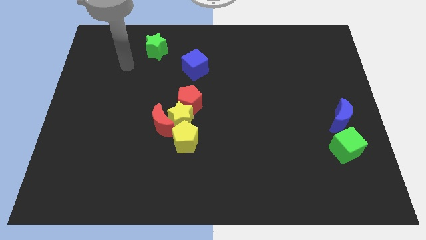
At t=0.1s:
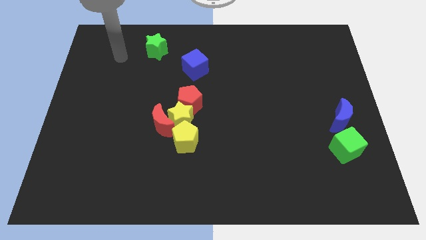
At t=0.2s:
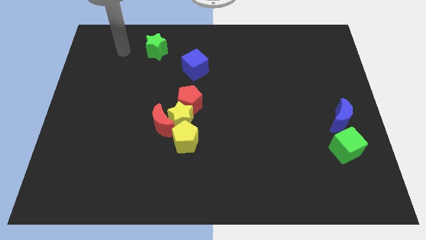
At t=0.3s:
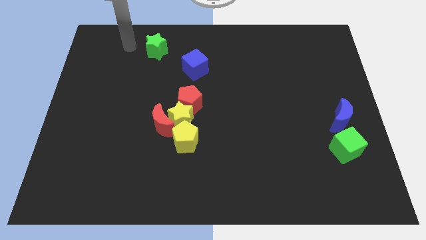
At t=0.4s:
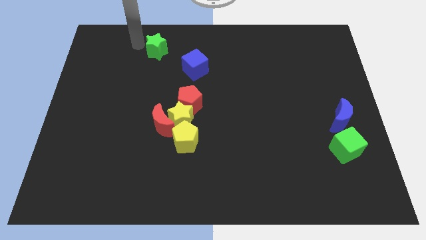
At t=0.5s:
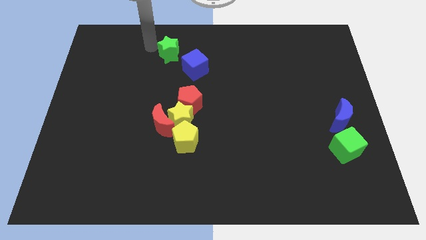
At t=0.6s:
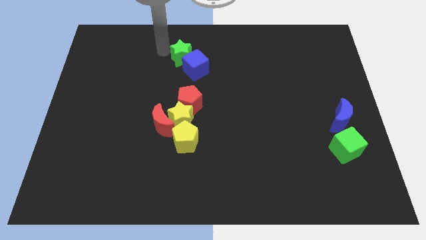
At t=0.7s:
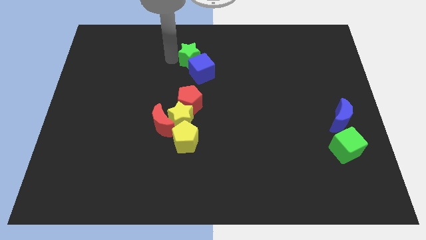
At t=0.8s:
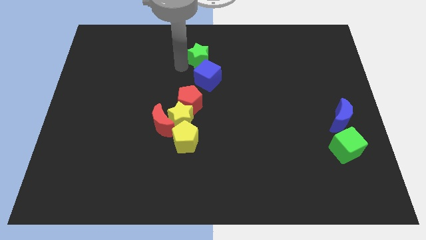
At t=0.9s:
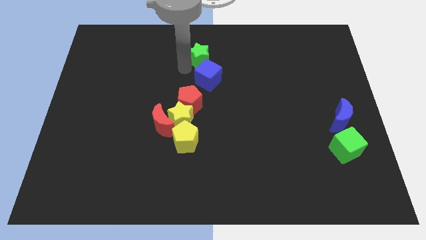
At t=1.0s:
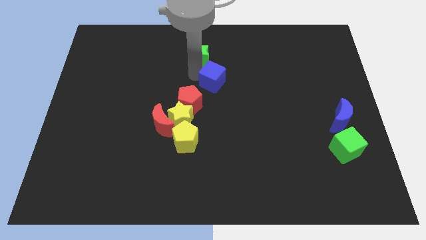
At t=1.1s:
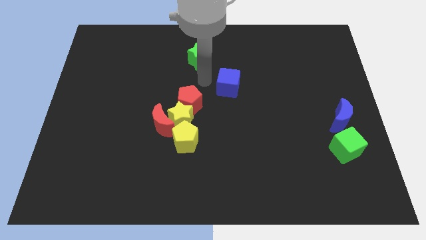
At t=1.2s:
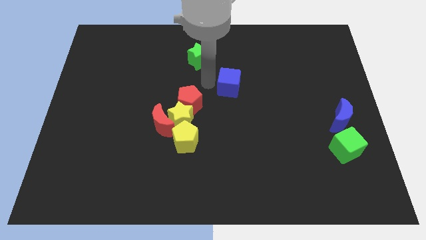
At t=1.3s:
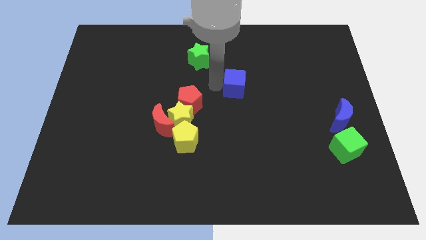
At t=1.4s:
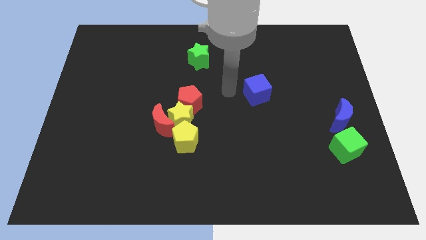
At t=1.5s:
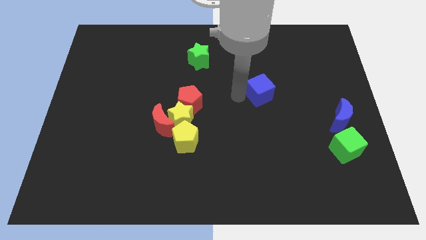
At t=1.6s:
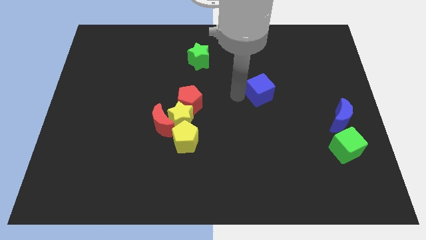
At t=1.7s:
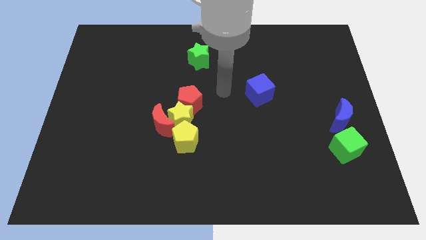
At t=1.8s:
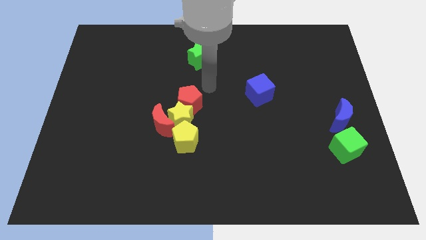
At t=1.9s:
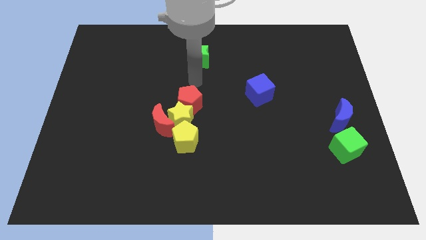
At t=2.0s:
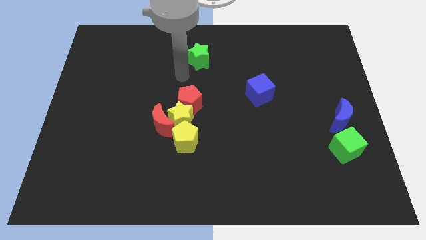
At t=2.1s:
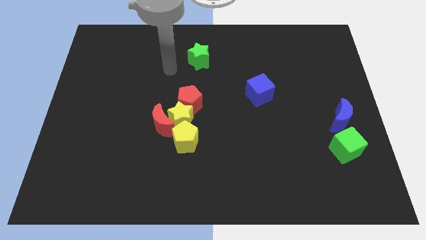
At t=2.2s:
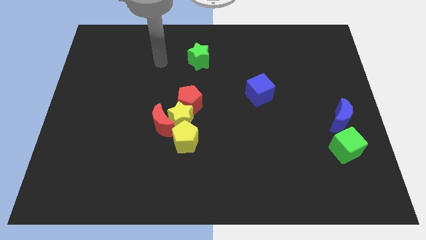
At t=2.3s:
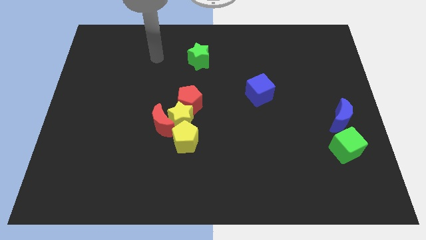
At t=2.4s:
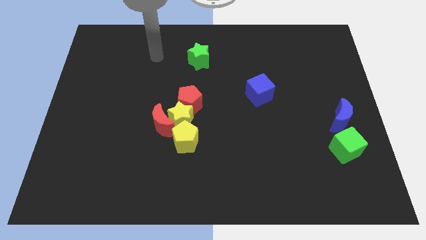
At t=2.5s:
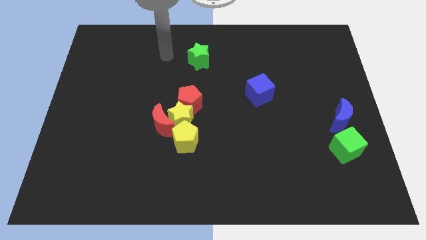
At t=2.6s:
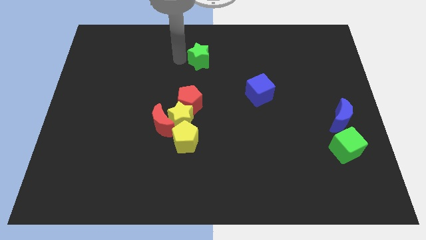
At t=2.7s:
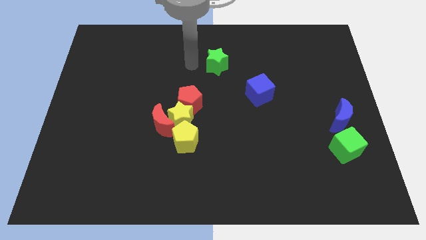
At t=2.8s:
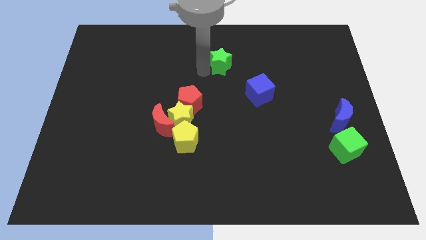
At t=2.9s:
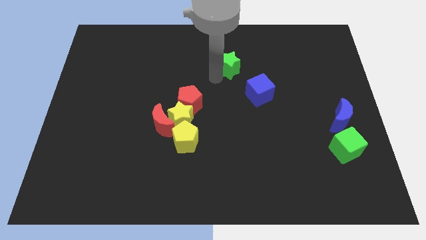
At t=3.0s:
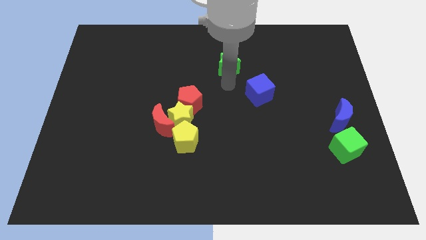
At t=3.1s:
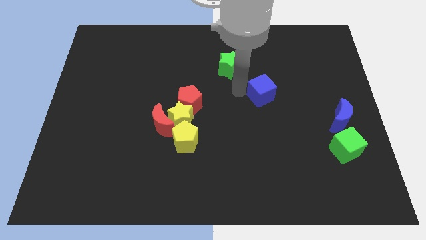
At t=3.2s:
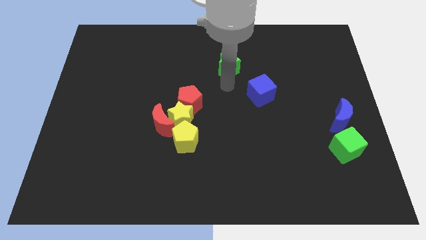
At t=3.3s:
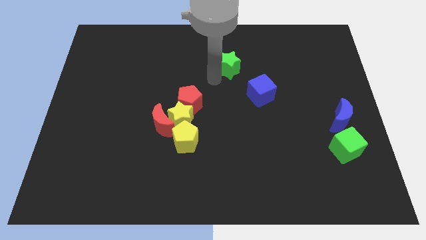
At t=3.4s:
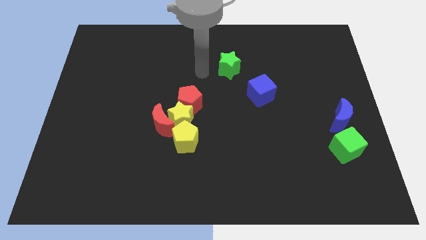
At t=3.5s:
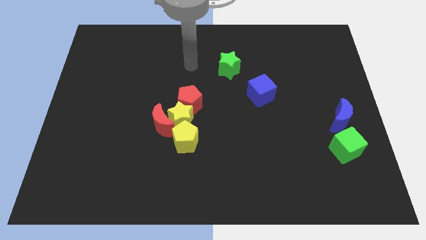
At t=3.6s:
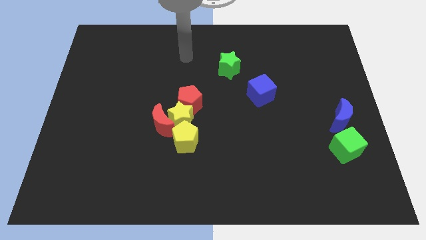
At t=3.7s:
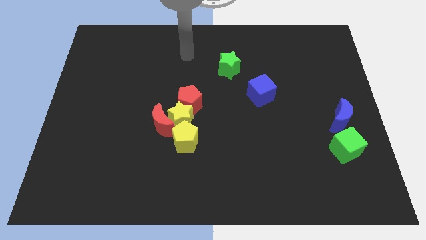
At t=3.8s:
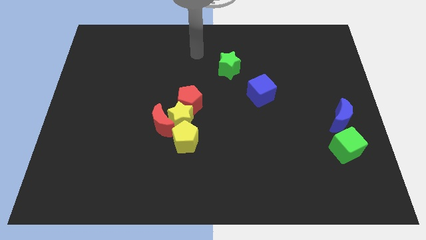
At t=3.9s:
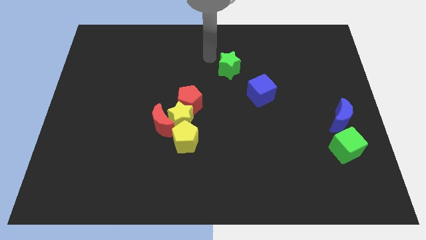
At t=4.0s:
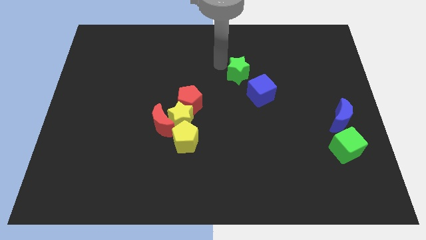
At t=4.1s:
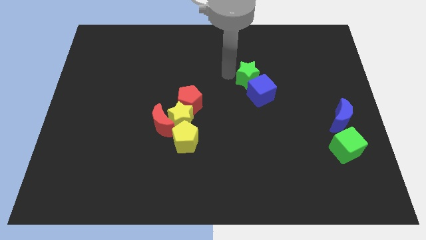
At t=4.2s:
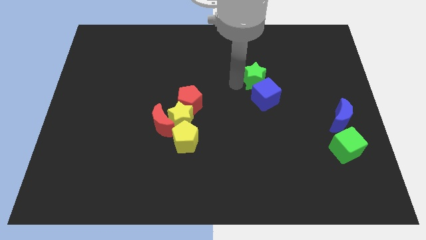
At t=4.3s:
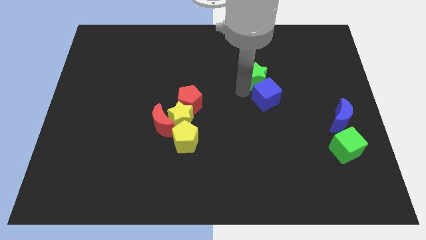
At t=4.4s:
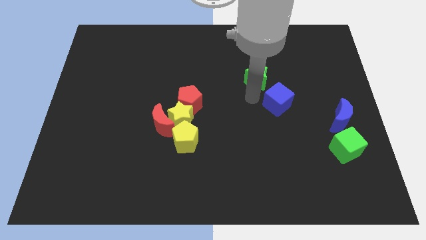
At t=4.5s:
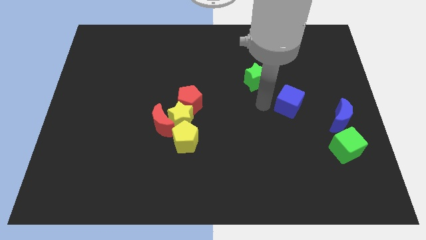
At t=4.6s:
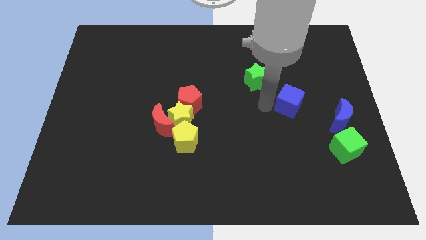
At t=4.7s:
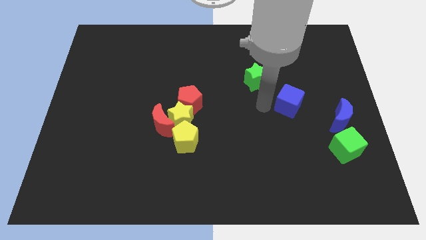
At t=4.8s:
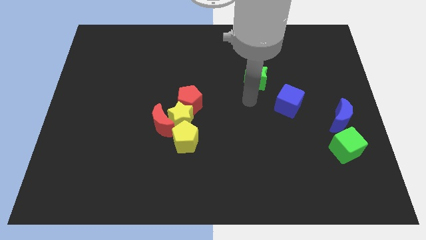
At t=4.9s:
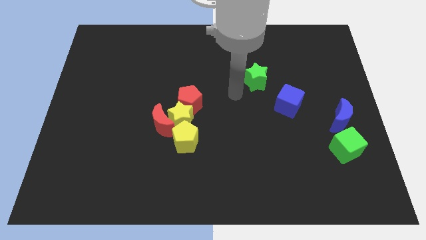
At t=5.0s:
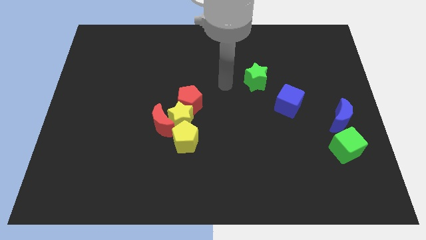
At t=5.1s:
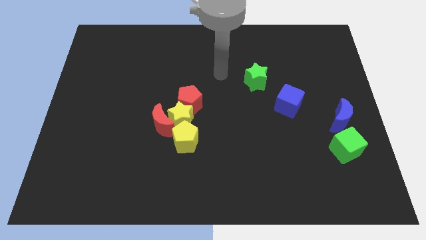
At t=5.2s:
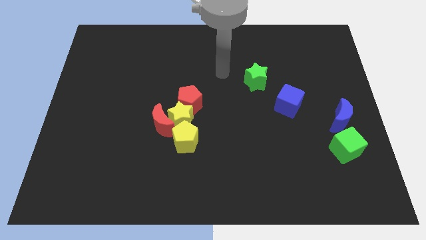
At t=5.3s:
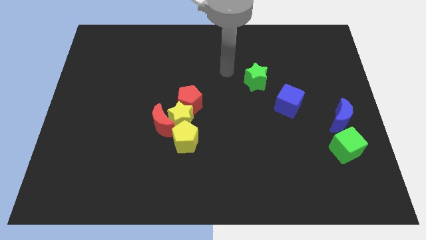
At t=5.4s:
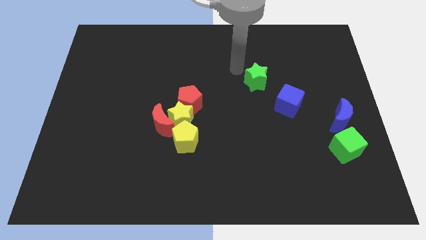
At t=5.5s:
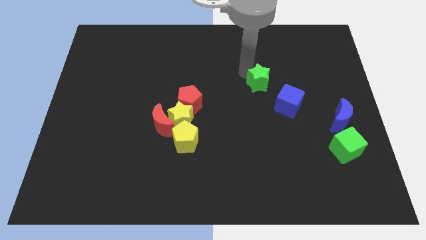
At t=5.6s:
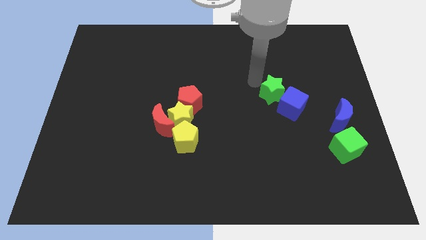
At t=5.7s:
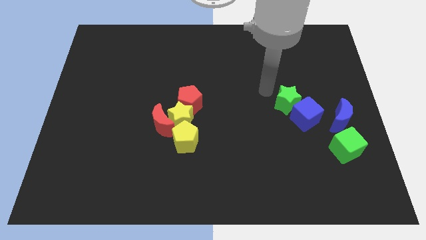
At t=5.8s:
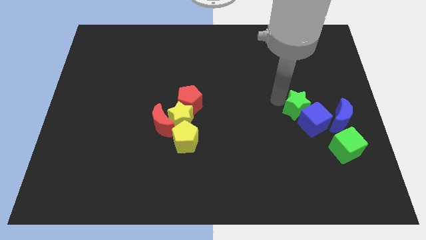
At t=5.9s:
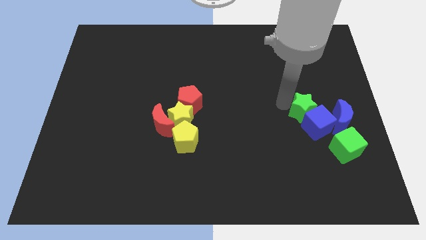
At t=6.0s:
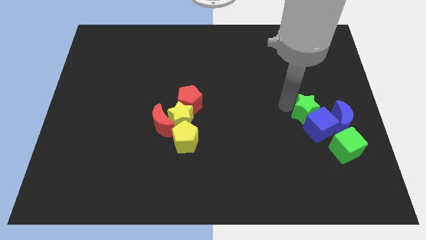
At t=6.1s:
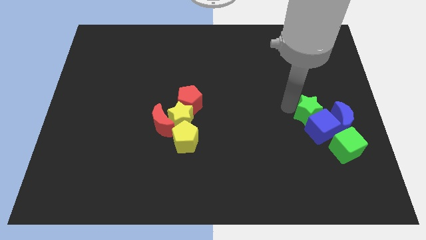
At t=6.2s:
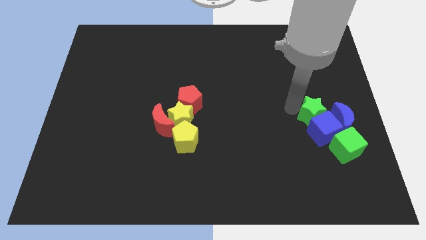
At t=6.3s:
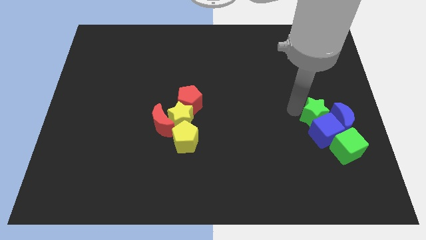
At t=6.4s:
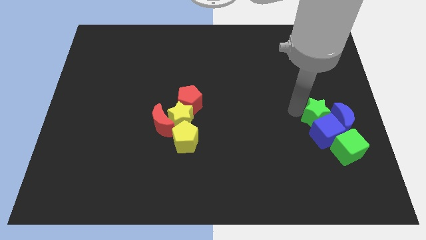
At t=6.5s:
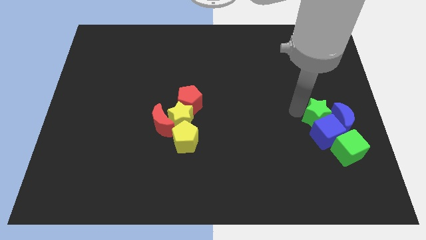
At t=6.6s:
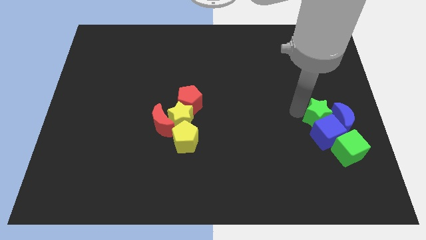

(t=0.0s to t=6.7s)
move the green star along with the blue cube into the green cube

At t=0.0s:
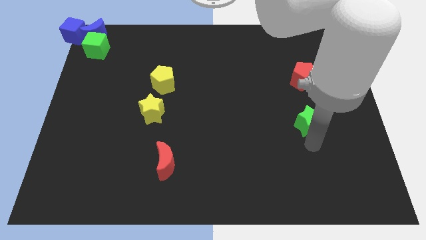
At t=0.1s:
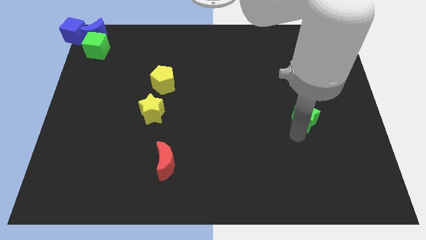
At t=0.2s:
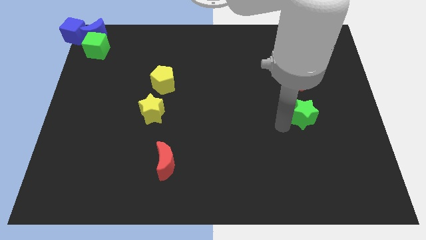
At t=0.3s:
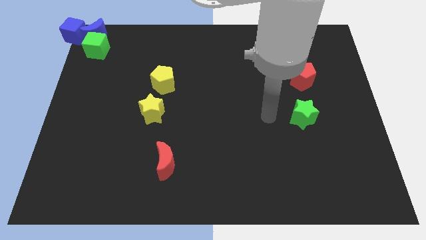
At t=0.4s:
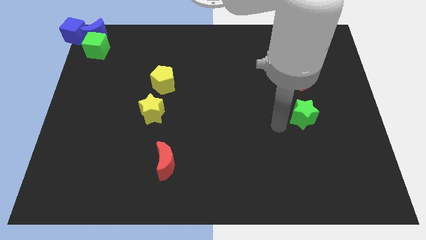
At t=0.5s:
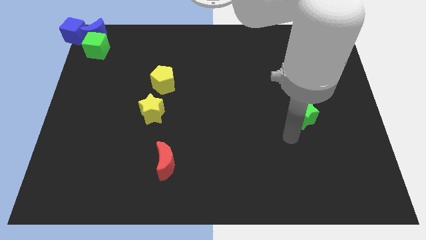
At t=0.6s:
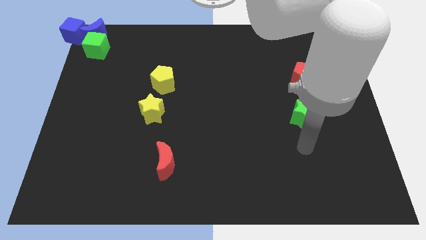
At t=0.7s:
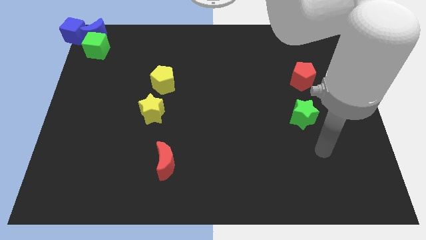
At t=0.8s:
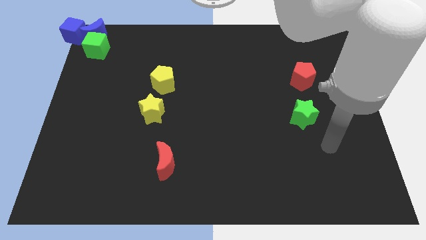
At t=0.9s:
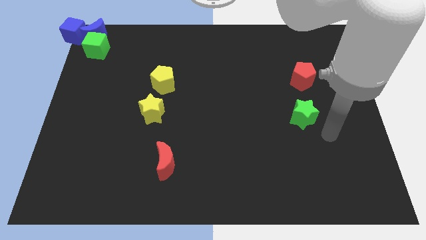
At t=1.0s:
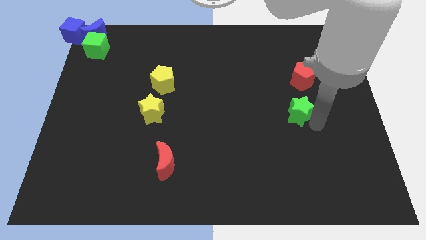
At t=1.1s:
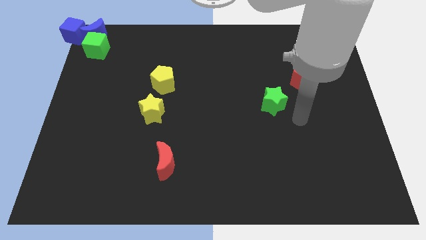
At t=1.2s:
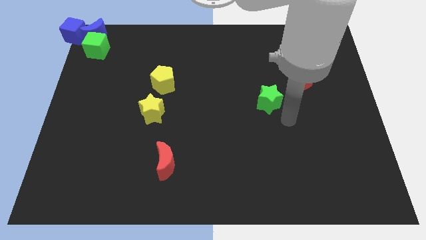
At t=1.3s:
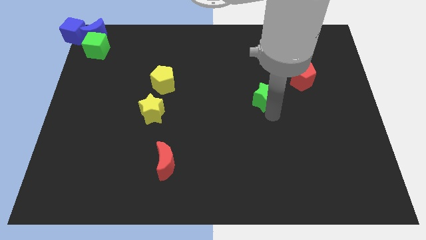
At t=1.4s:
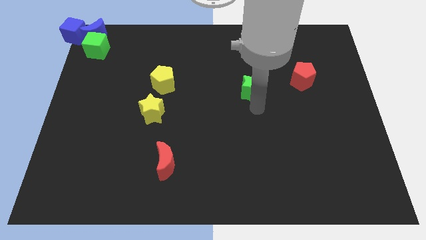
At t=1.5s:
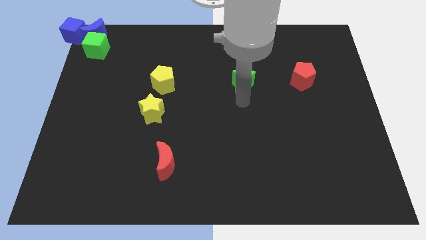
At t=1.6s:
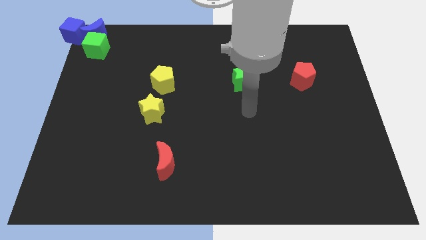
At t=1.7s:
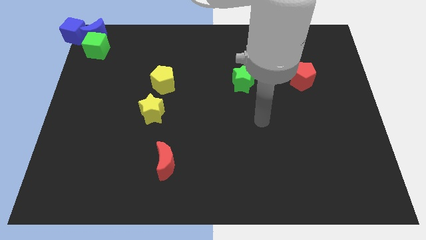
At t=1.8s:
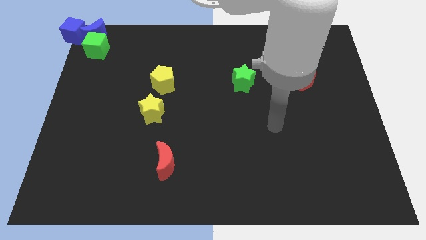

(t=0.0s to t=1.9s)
move the green star slightly to the center of the board

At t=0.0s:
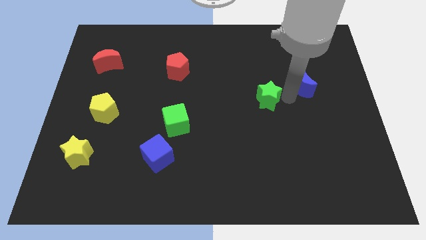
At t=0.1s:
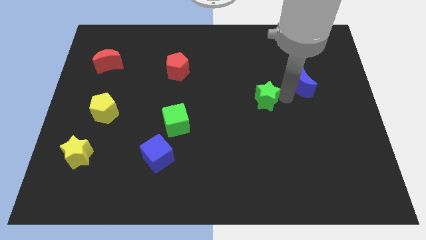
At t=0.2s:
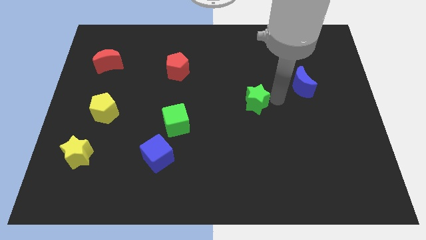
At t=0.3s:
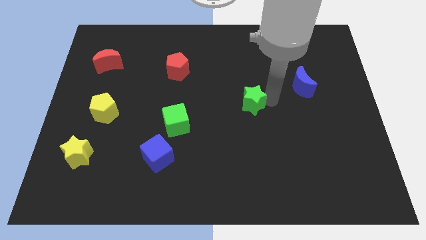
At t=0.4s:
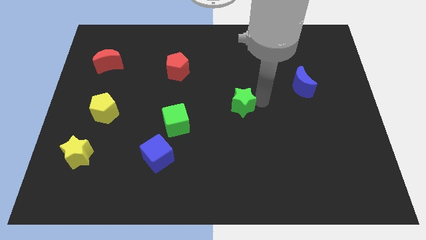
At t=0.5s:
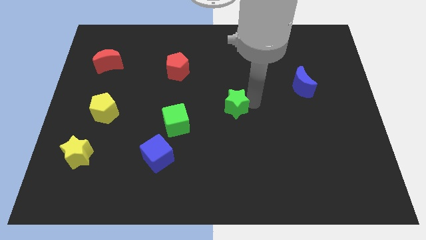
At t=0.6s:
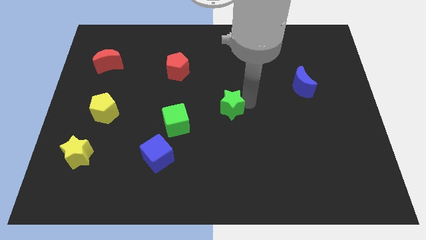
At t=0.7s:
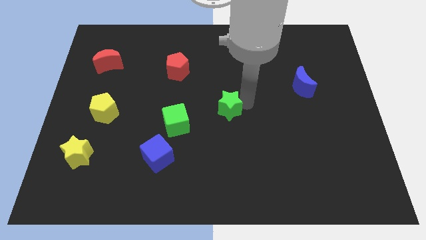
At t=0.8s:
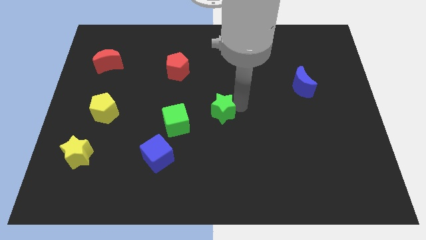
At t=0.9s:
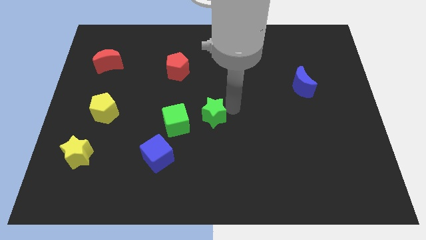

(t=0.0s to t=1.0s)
move green star towards green cube
